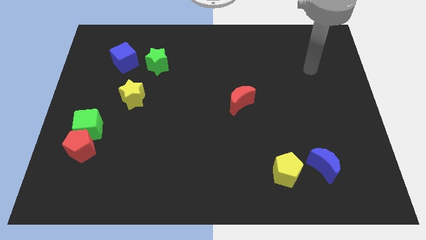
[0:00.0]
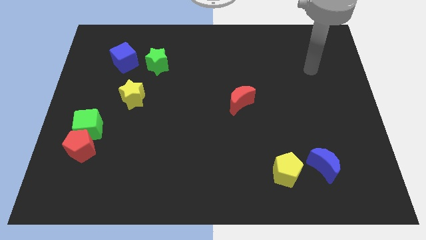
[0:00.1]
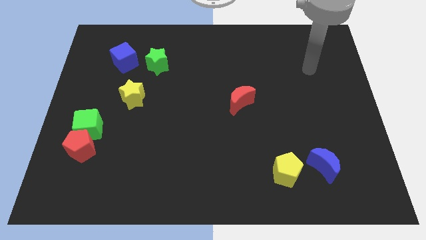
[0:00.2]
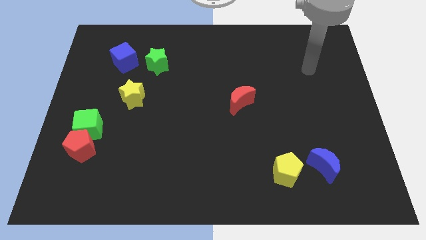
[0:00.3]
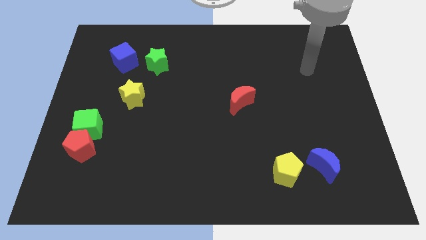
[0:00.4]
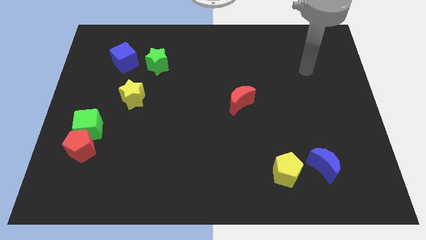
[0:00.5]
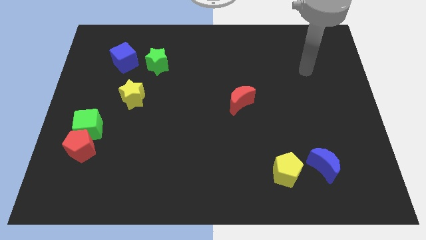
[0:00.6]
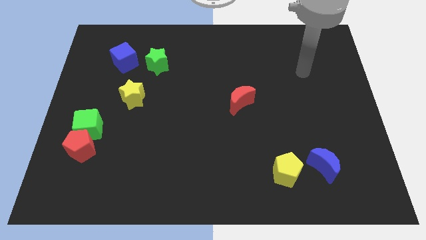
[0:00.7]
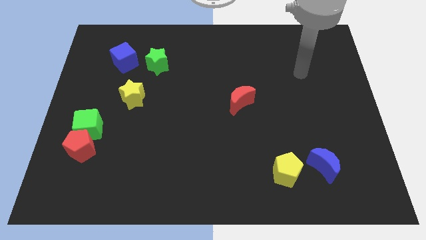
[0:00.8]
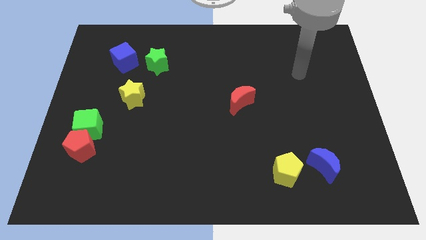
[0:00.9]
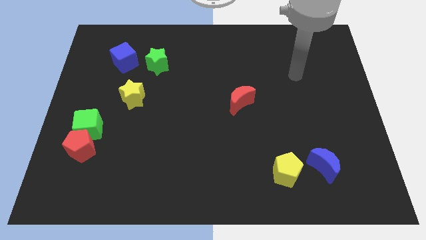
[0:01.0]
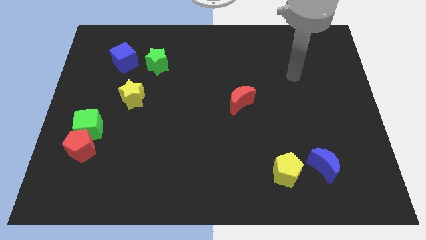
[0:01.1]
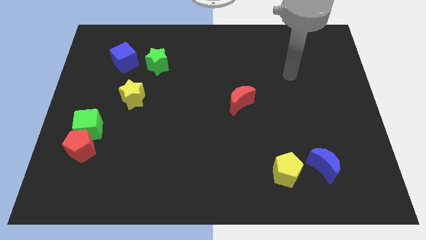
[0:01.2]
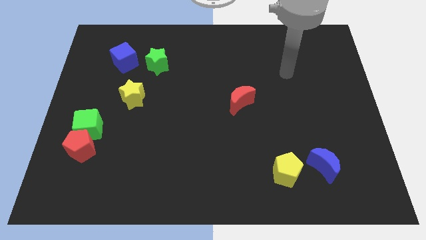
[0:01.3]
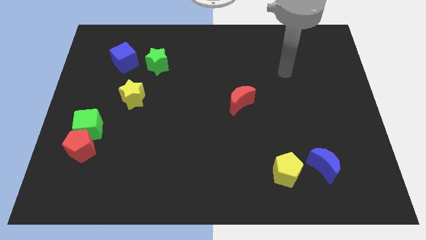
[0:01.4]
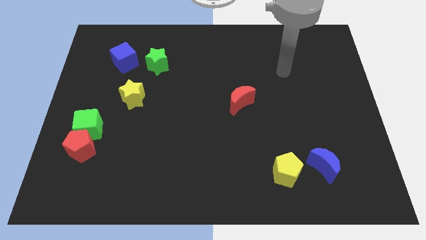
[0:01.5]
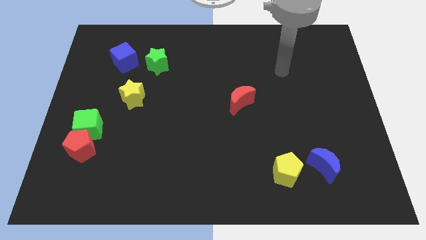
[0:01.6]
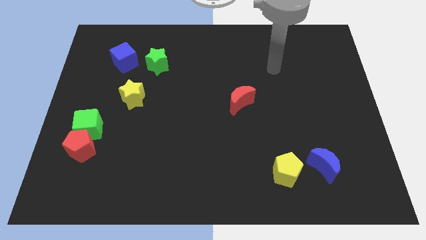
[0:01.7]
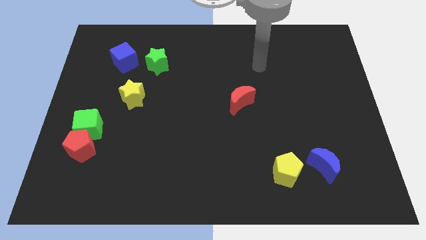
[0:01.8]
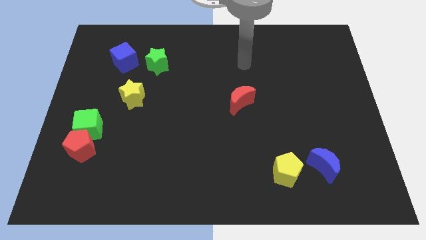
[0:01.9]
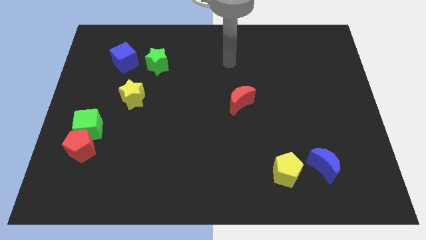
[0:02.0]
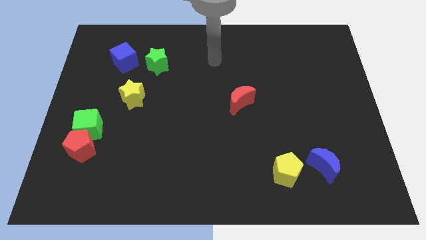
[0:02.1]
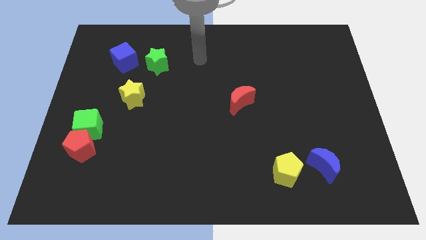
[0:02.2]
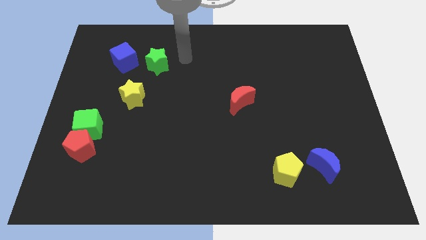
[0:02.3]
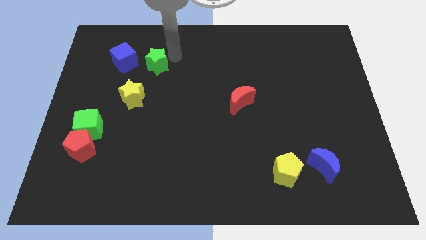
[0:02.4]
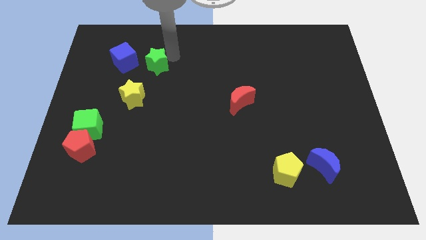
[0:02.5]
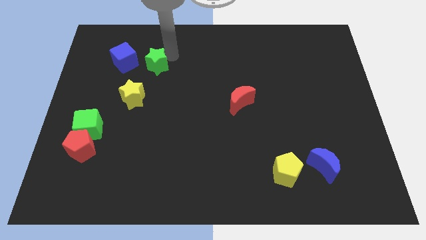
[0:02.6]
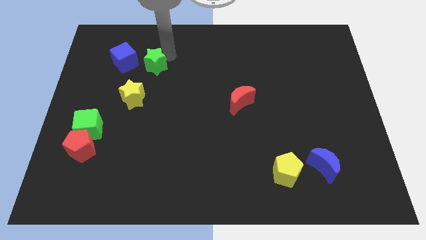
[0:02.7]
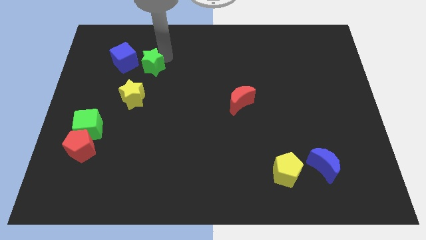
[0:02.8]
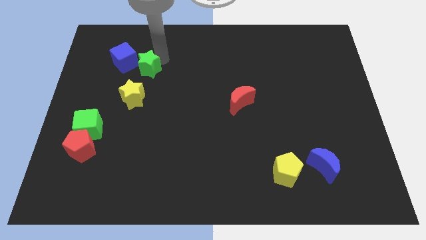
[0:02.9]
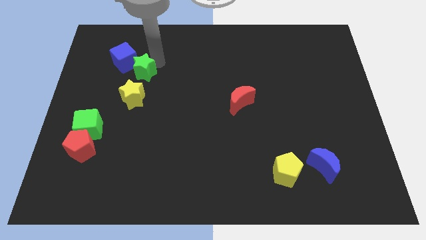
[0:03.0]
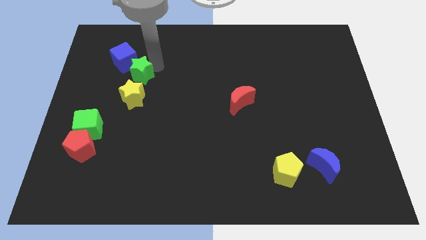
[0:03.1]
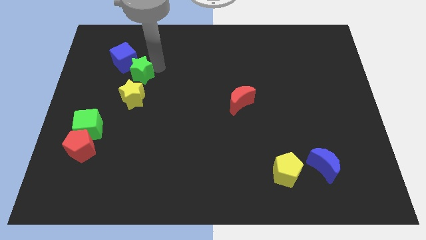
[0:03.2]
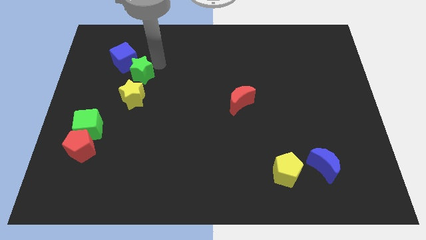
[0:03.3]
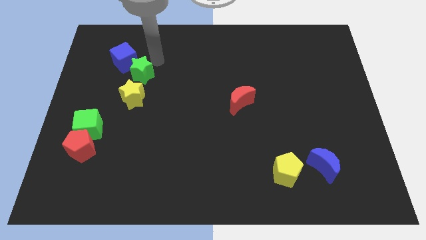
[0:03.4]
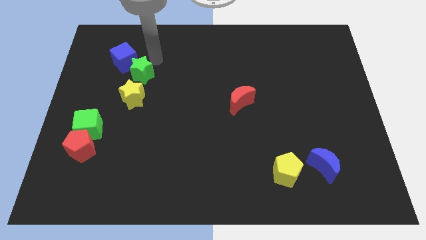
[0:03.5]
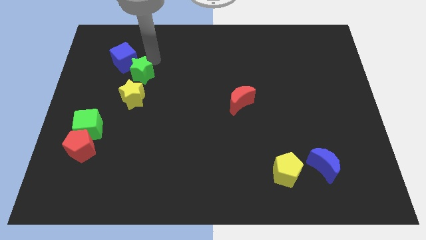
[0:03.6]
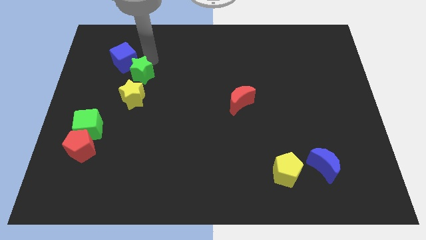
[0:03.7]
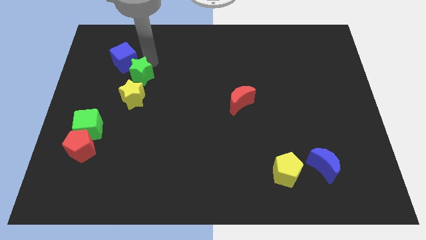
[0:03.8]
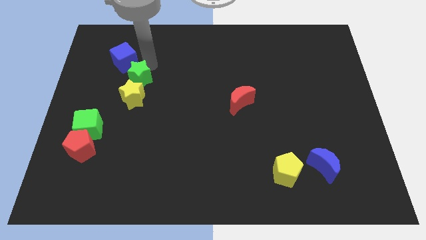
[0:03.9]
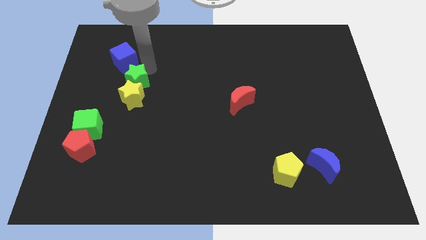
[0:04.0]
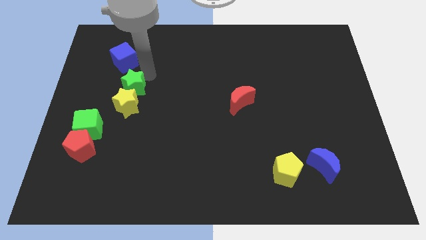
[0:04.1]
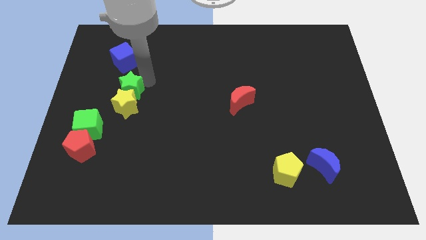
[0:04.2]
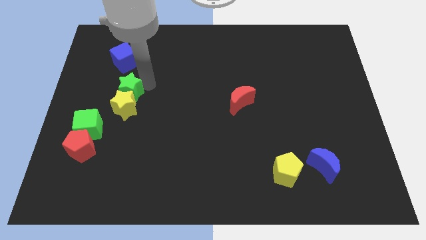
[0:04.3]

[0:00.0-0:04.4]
push the green star into yellow star

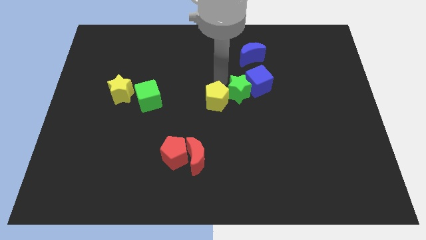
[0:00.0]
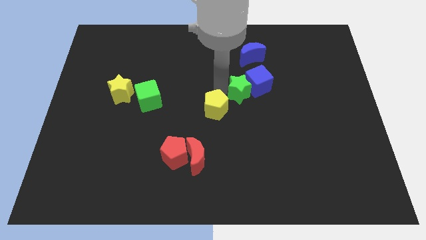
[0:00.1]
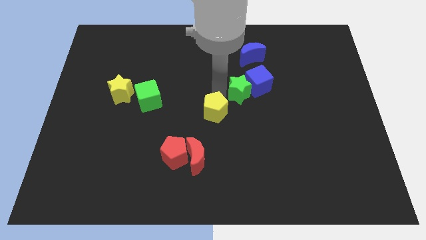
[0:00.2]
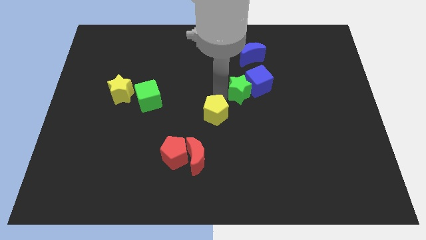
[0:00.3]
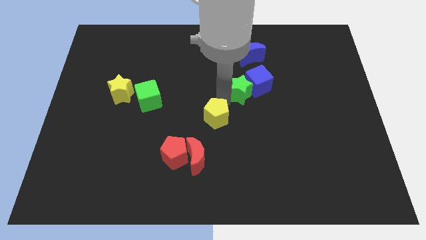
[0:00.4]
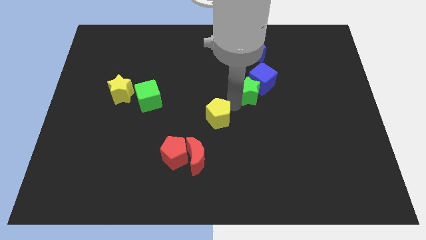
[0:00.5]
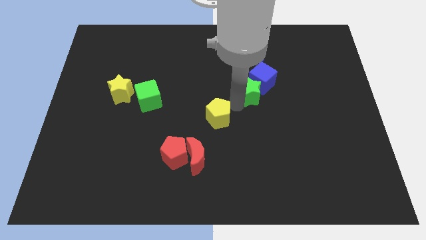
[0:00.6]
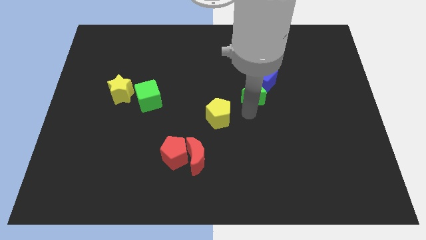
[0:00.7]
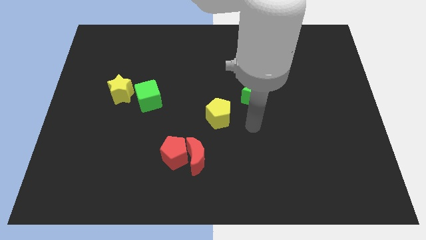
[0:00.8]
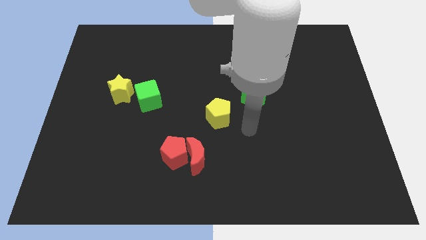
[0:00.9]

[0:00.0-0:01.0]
move the yellow pentagon slightly downwards

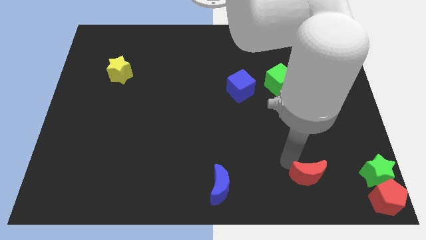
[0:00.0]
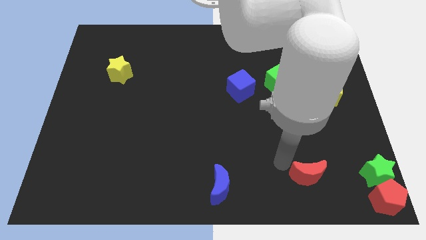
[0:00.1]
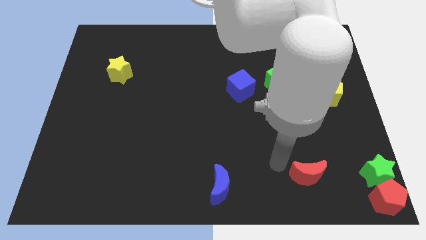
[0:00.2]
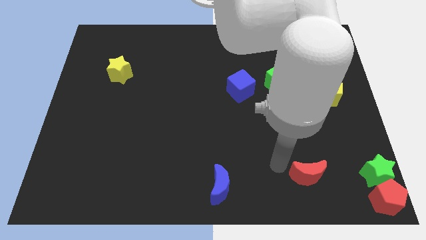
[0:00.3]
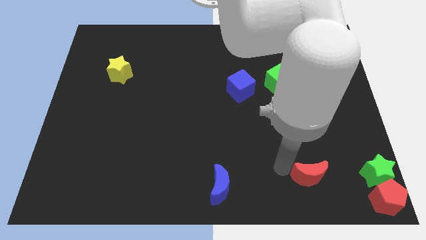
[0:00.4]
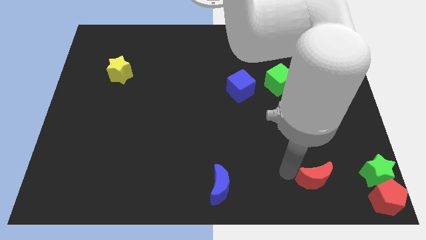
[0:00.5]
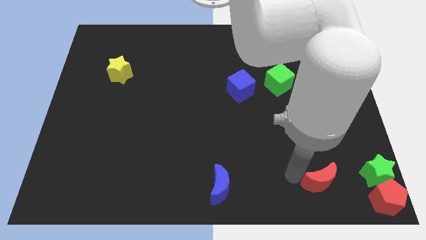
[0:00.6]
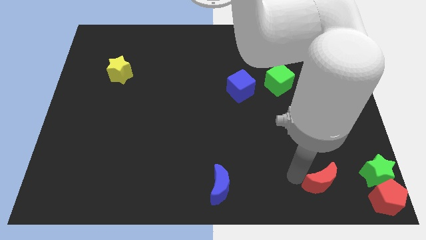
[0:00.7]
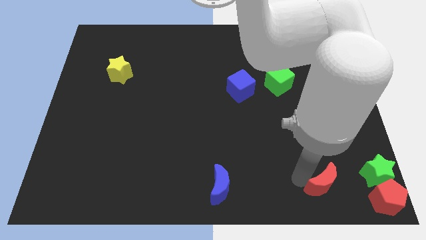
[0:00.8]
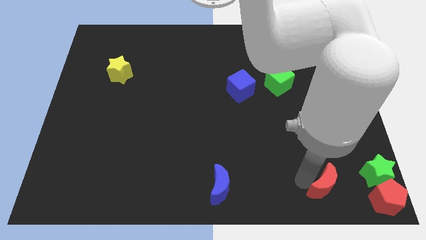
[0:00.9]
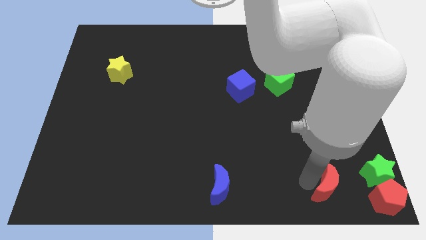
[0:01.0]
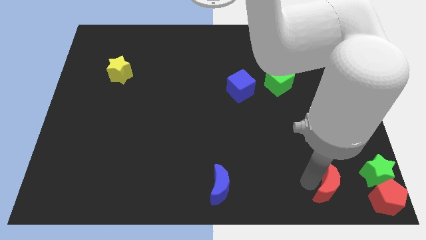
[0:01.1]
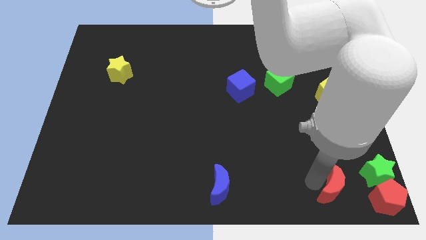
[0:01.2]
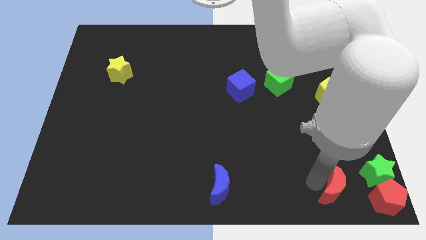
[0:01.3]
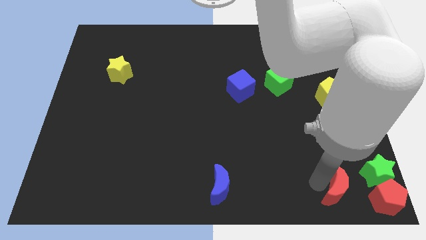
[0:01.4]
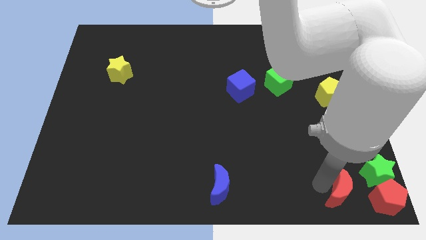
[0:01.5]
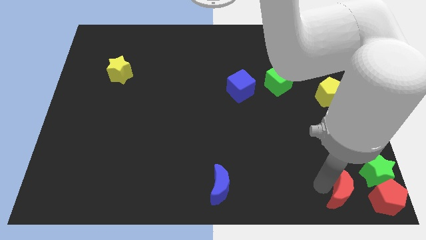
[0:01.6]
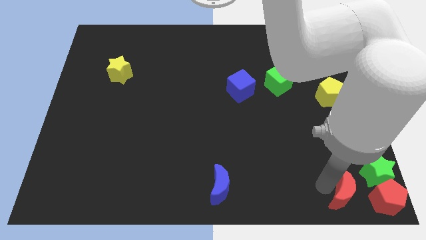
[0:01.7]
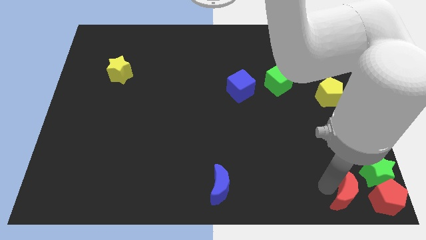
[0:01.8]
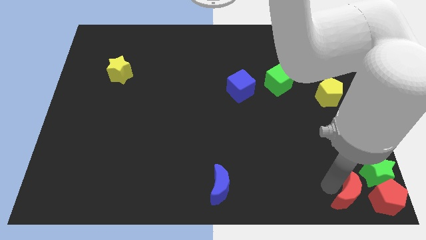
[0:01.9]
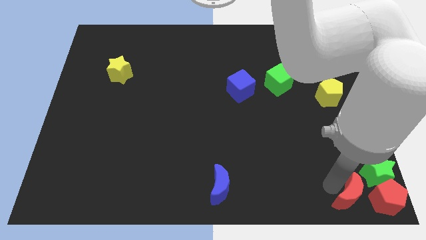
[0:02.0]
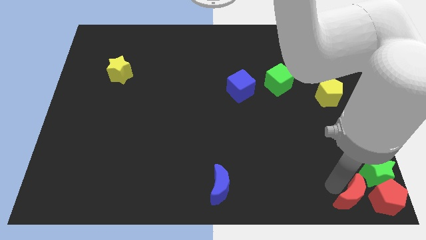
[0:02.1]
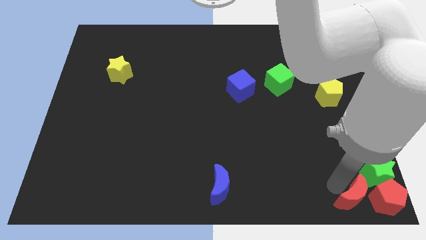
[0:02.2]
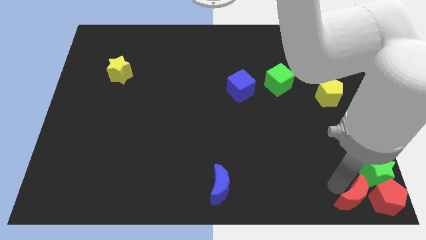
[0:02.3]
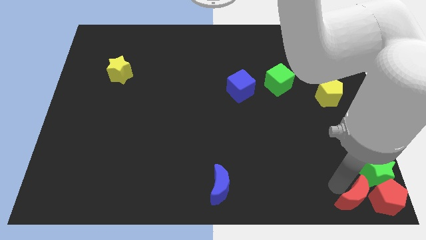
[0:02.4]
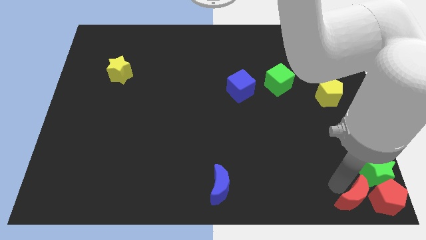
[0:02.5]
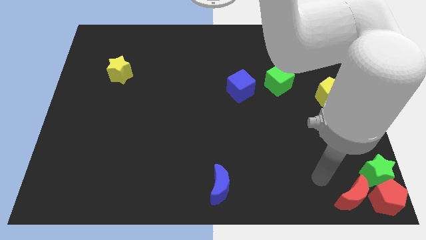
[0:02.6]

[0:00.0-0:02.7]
move the red crescent towards left to the red pentagon

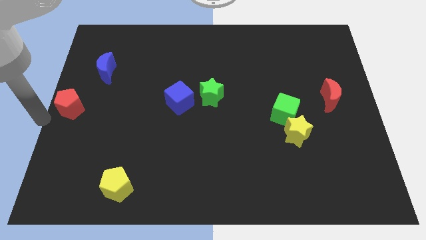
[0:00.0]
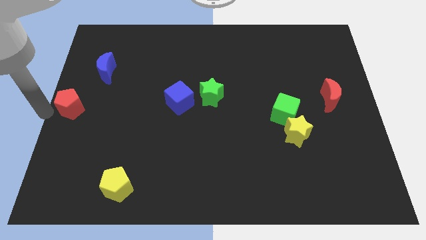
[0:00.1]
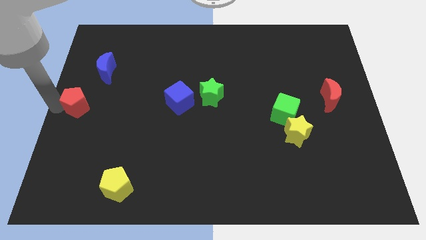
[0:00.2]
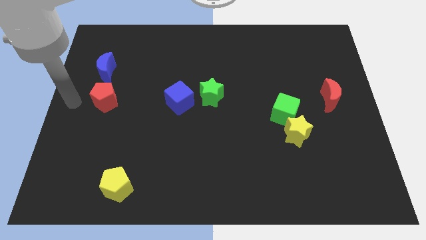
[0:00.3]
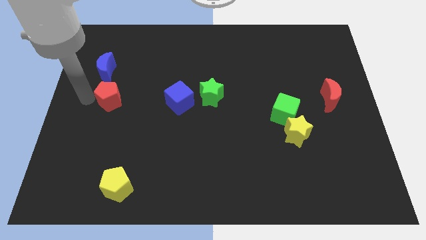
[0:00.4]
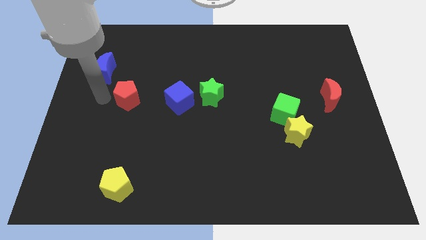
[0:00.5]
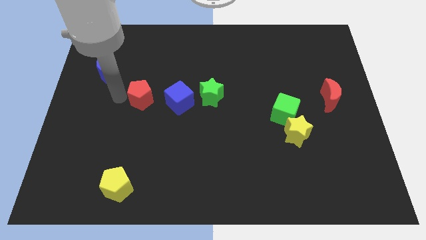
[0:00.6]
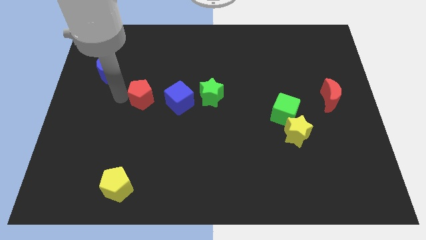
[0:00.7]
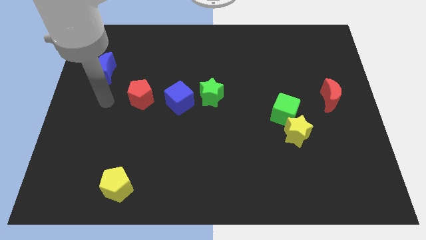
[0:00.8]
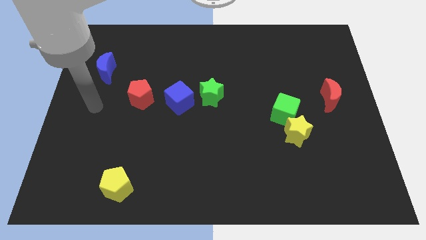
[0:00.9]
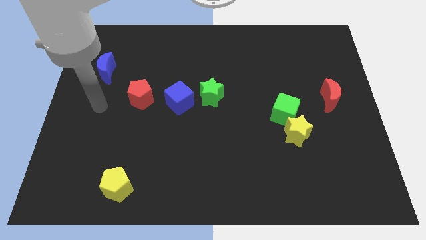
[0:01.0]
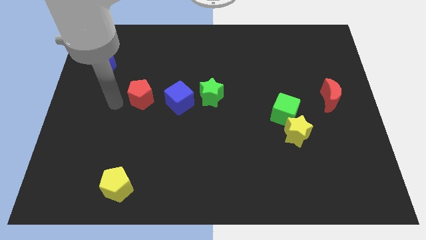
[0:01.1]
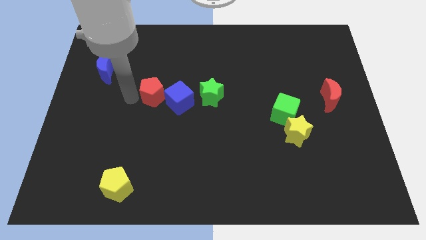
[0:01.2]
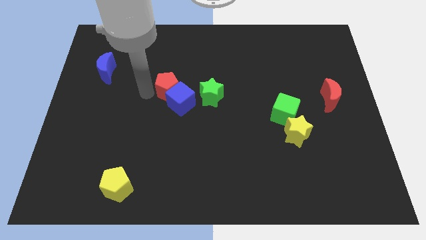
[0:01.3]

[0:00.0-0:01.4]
push the red pentagon into the blue cube
